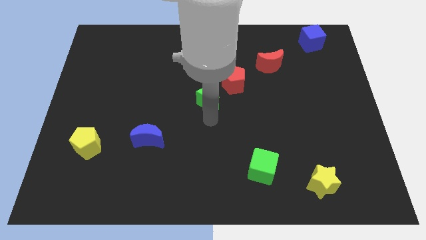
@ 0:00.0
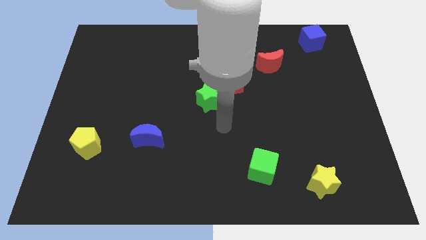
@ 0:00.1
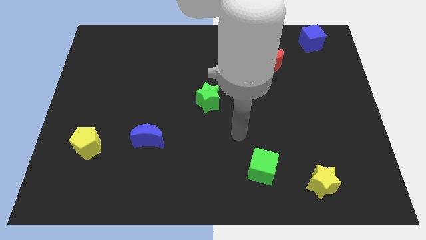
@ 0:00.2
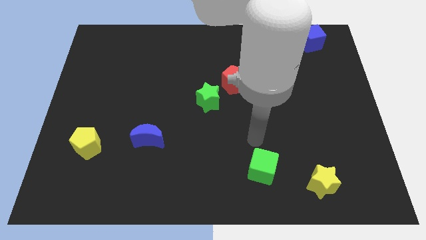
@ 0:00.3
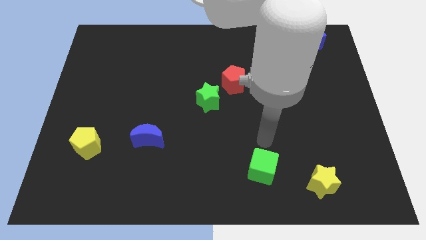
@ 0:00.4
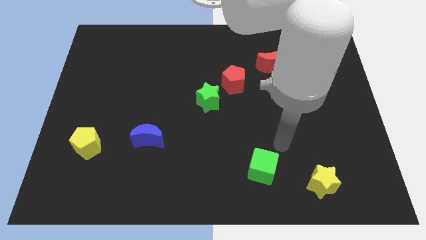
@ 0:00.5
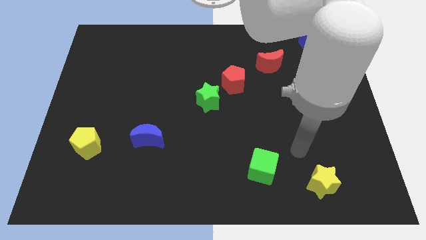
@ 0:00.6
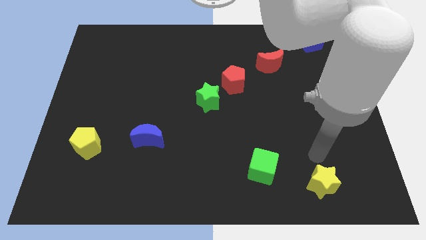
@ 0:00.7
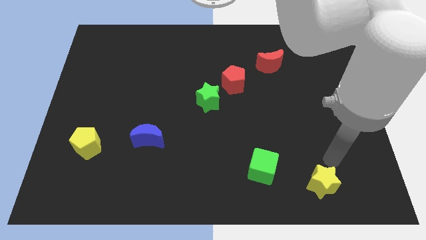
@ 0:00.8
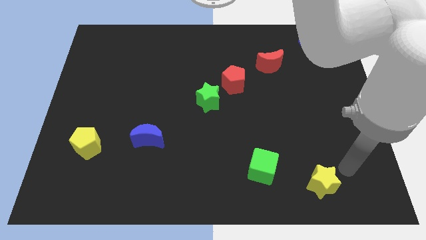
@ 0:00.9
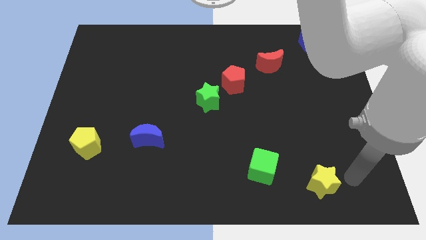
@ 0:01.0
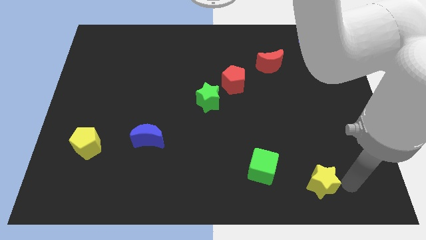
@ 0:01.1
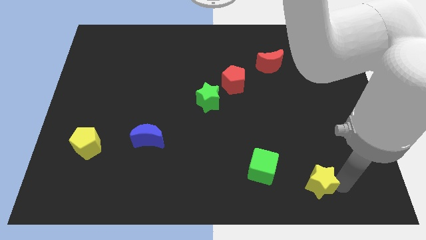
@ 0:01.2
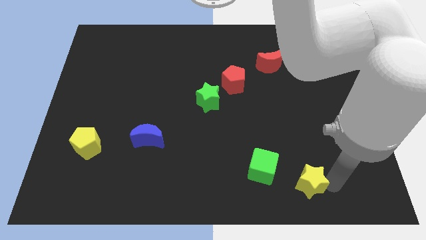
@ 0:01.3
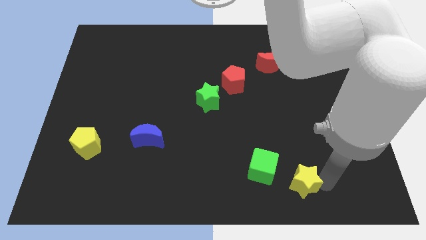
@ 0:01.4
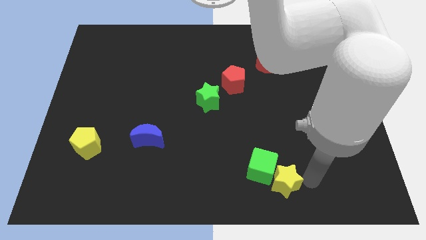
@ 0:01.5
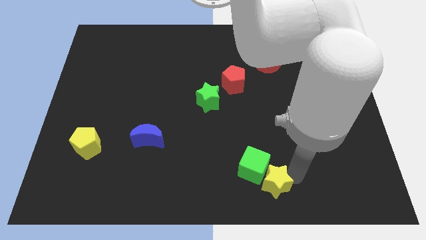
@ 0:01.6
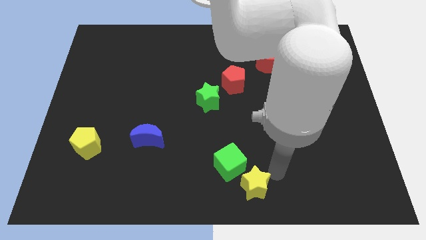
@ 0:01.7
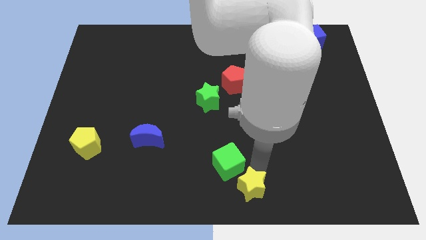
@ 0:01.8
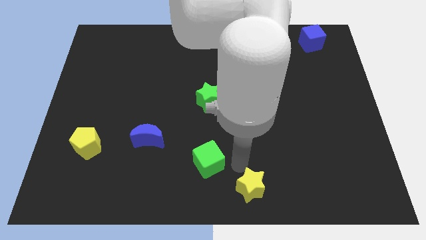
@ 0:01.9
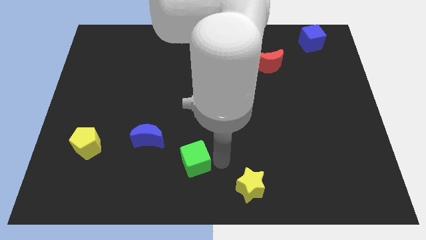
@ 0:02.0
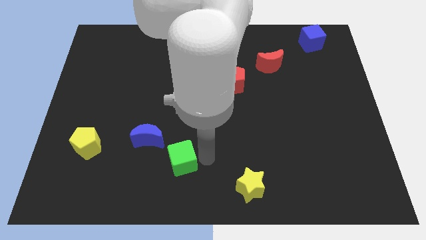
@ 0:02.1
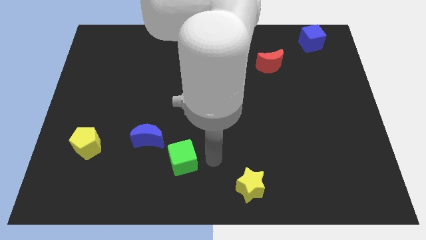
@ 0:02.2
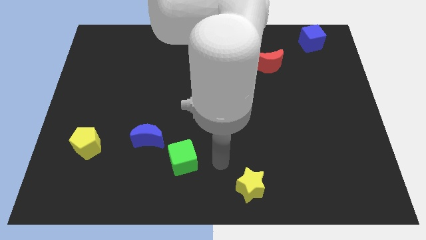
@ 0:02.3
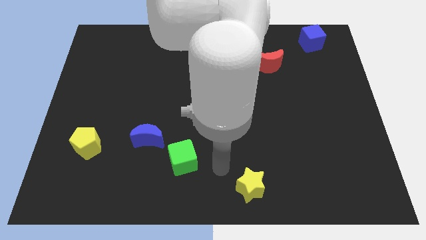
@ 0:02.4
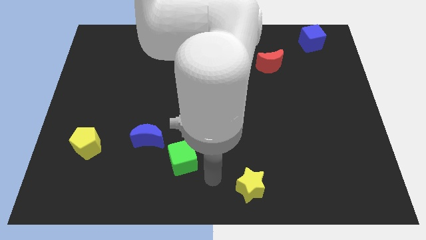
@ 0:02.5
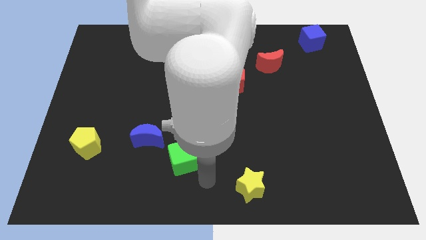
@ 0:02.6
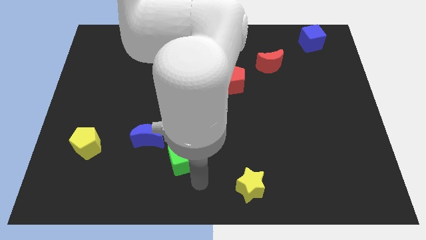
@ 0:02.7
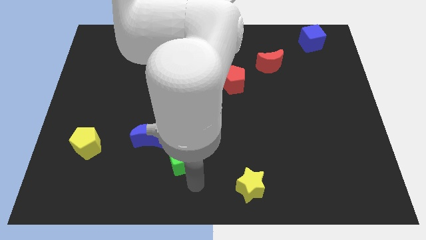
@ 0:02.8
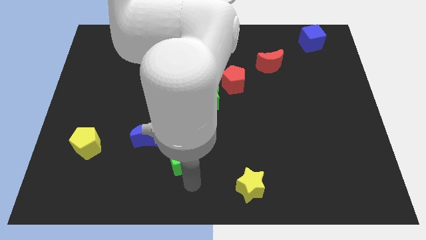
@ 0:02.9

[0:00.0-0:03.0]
slide the yellow star and the green cube slightly to the left

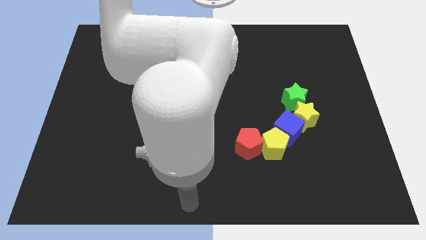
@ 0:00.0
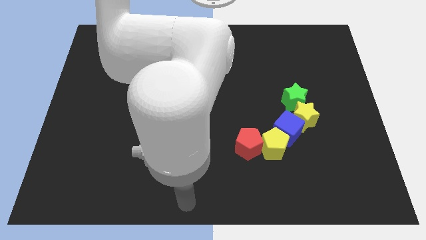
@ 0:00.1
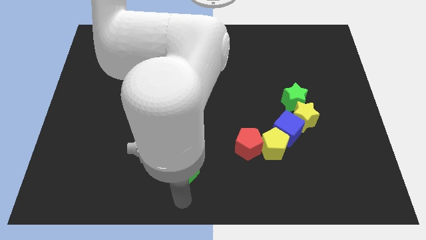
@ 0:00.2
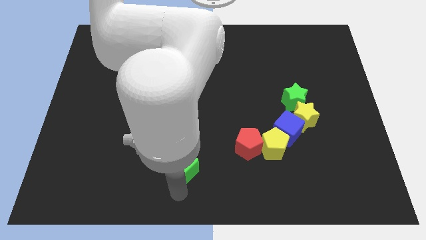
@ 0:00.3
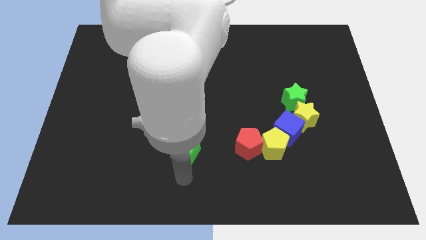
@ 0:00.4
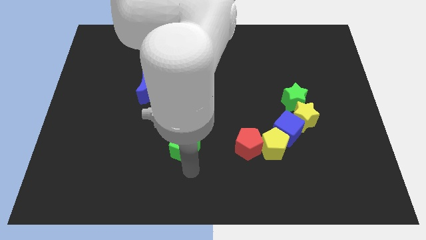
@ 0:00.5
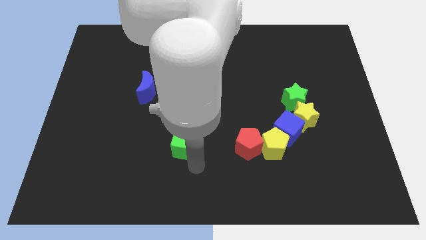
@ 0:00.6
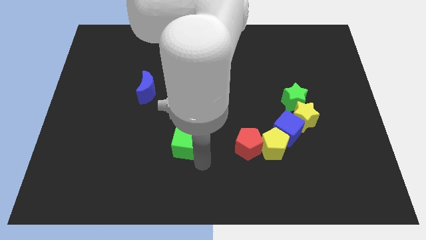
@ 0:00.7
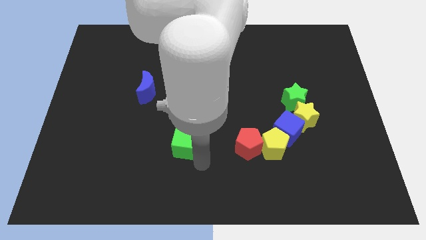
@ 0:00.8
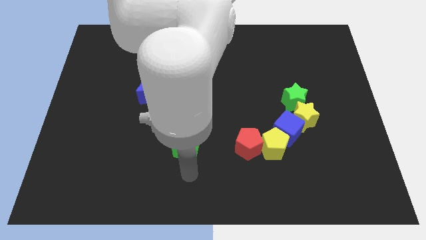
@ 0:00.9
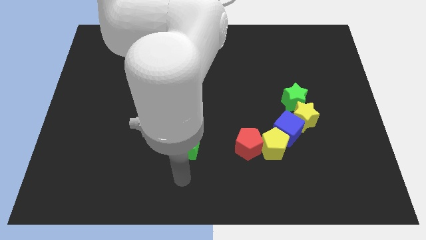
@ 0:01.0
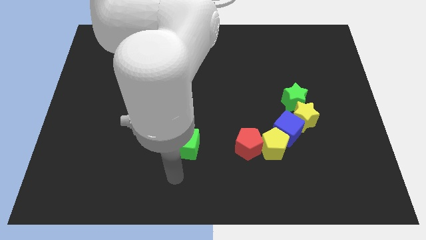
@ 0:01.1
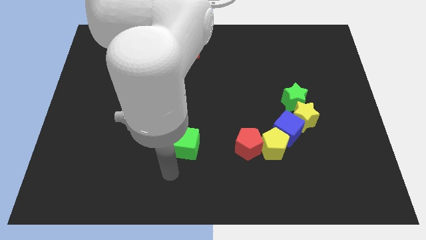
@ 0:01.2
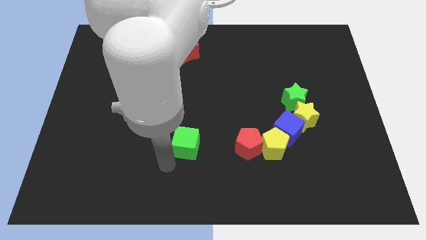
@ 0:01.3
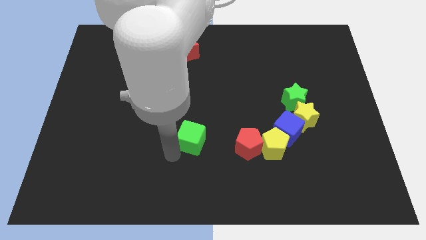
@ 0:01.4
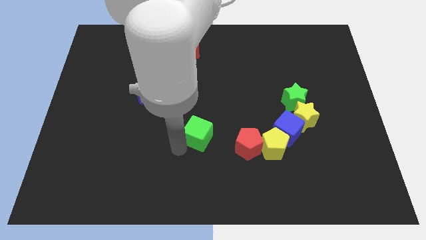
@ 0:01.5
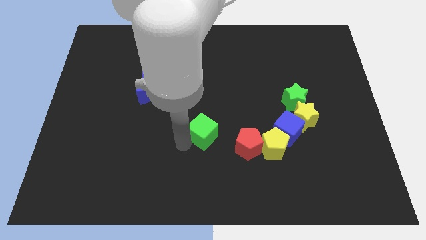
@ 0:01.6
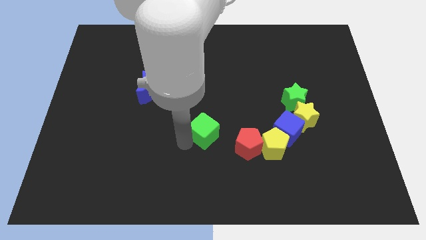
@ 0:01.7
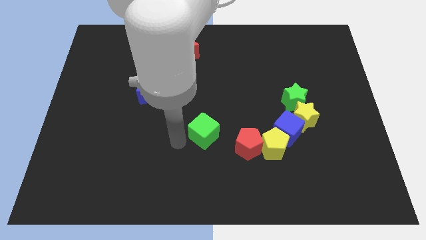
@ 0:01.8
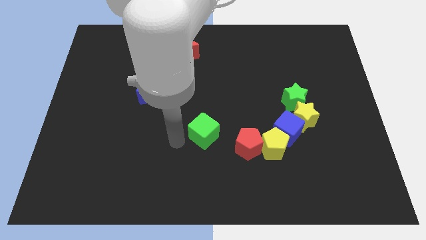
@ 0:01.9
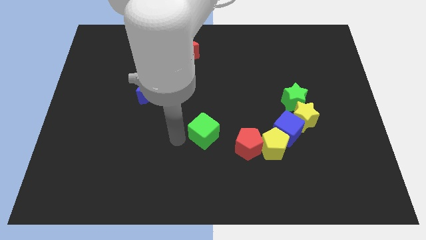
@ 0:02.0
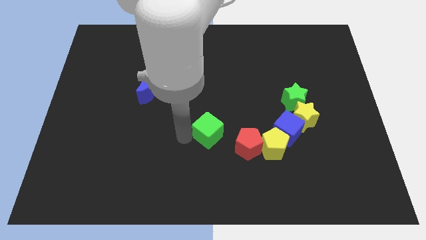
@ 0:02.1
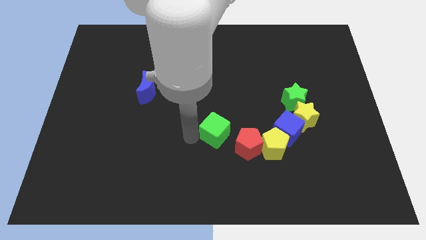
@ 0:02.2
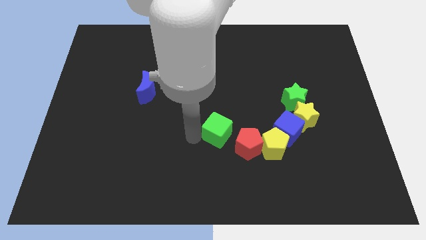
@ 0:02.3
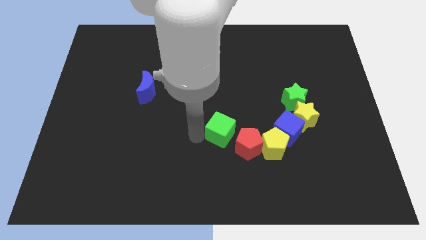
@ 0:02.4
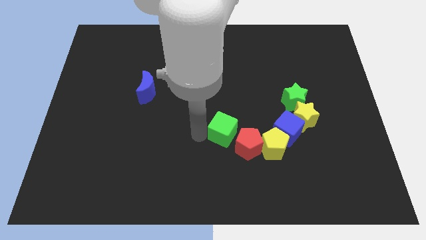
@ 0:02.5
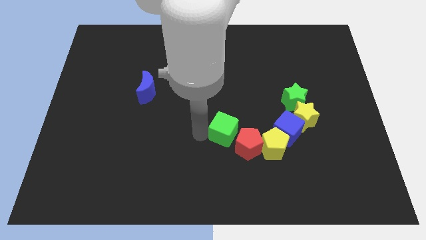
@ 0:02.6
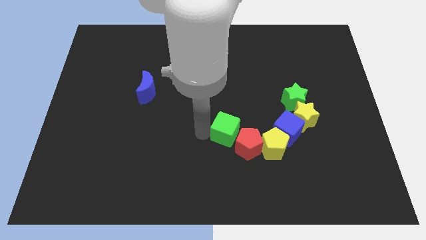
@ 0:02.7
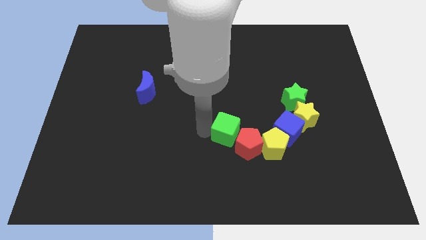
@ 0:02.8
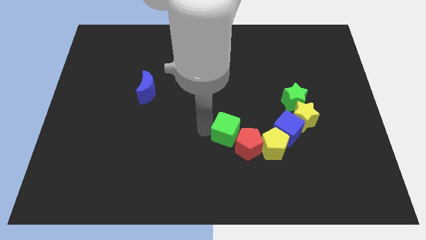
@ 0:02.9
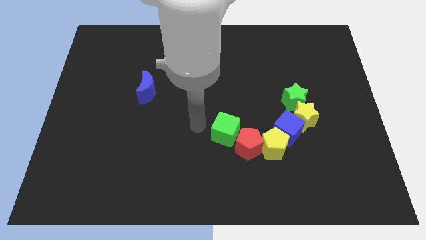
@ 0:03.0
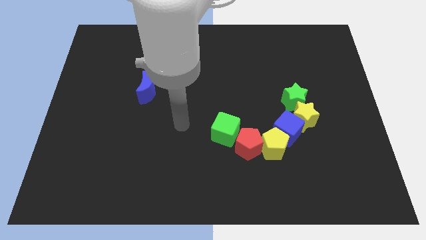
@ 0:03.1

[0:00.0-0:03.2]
place the green cube at the top left side of red pentagon

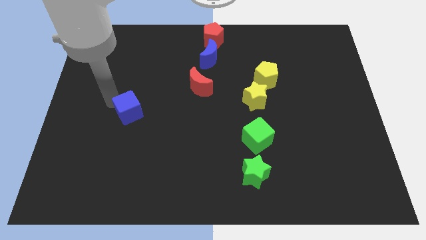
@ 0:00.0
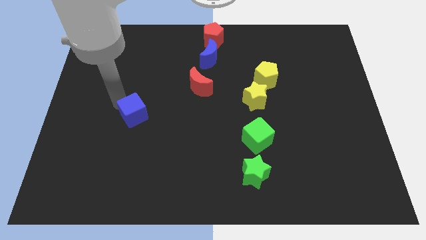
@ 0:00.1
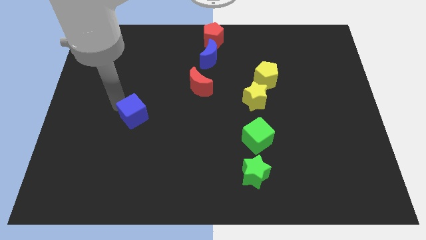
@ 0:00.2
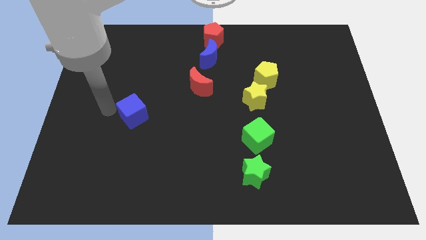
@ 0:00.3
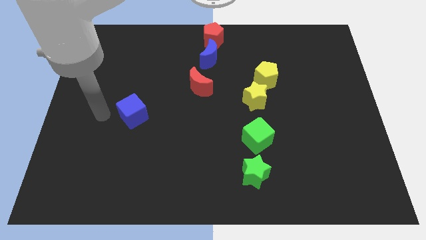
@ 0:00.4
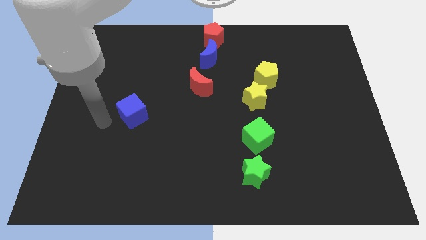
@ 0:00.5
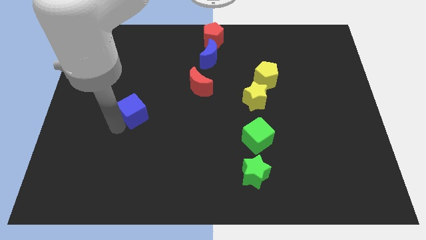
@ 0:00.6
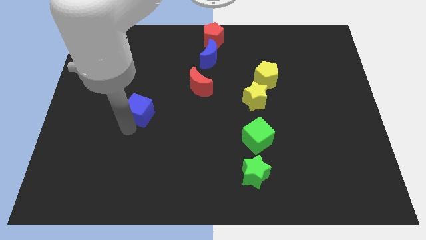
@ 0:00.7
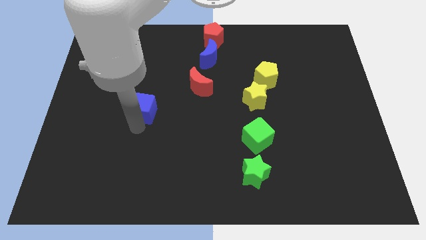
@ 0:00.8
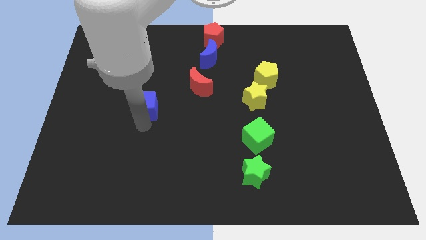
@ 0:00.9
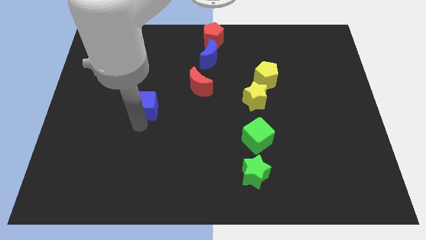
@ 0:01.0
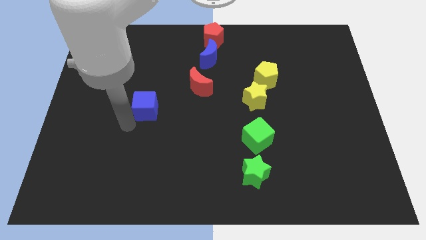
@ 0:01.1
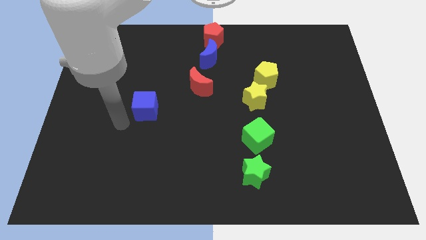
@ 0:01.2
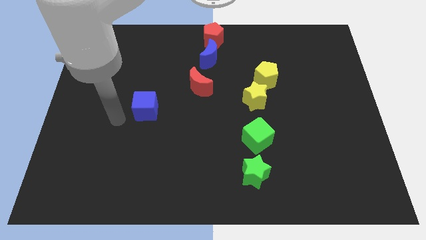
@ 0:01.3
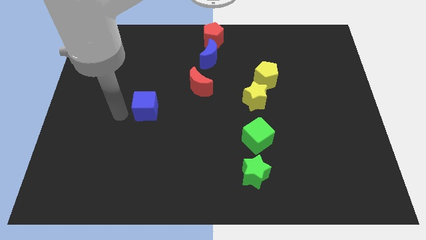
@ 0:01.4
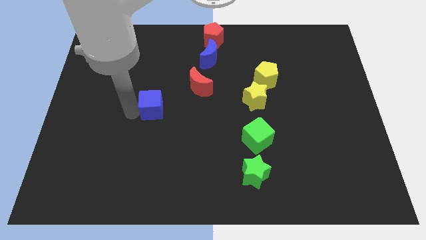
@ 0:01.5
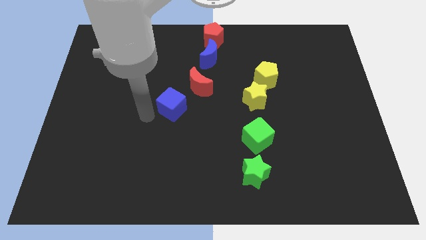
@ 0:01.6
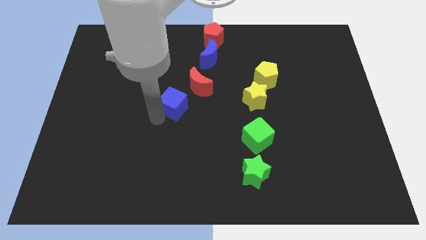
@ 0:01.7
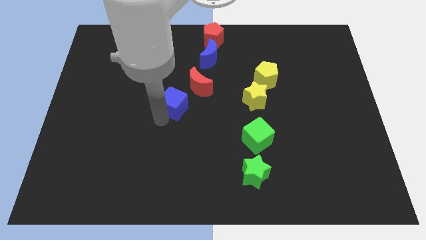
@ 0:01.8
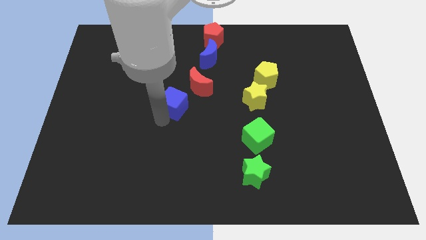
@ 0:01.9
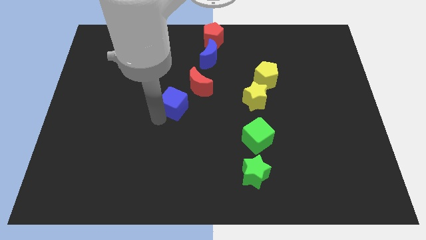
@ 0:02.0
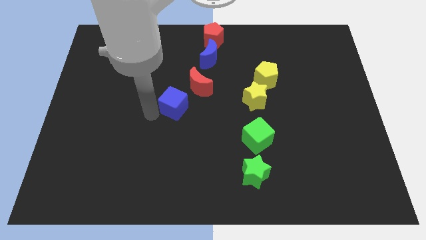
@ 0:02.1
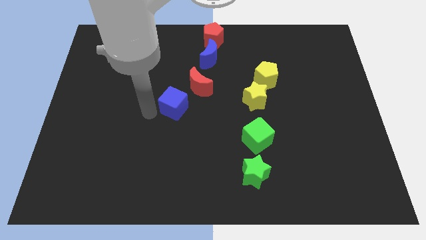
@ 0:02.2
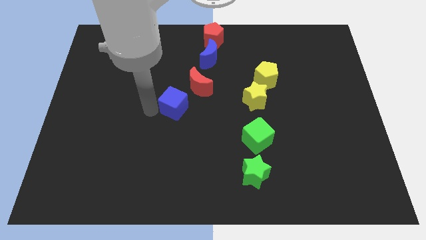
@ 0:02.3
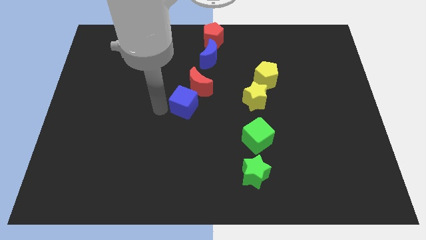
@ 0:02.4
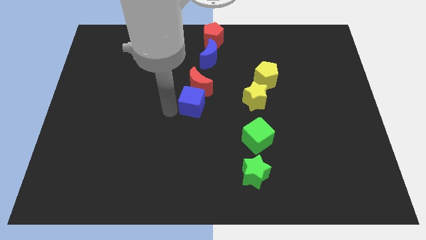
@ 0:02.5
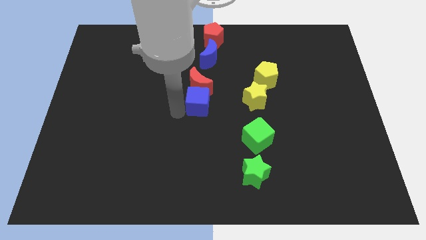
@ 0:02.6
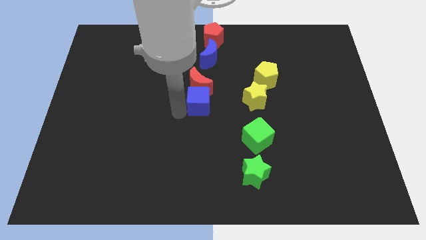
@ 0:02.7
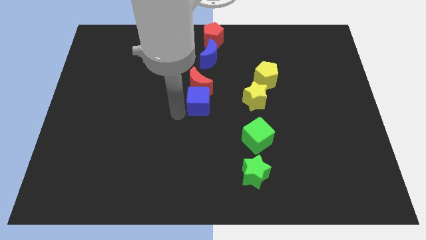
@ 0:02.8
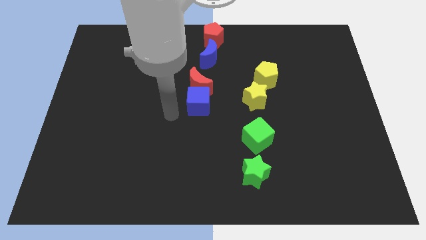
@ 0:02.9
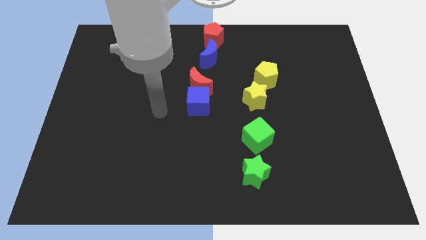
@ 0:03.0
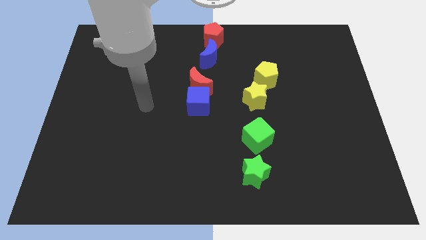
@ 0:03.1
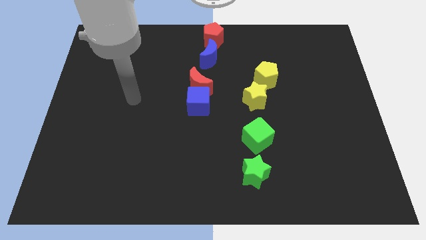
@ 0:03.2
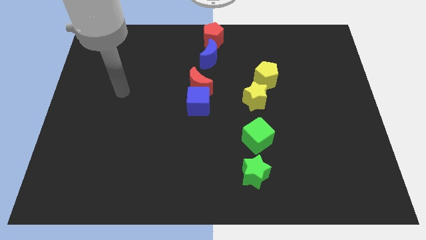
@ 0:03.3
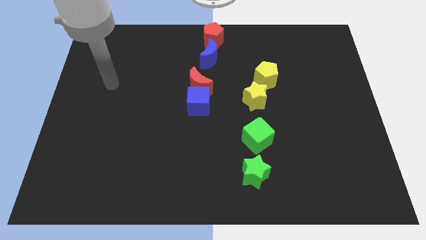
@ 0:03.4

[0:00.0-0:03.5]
place the blue cube at the center of the board
